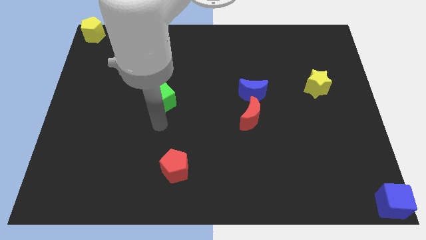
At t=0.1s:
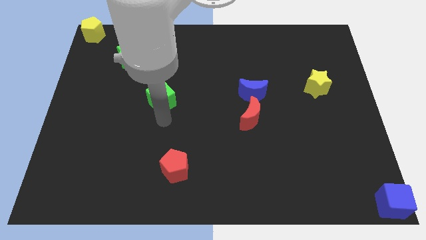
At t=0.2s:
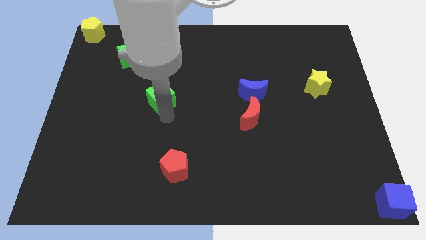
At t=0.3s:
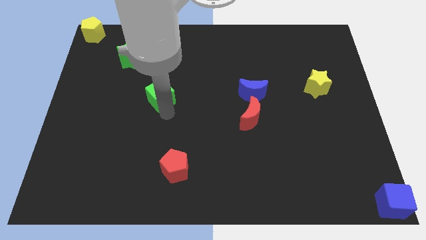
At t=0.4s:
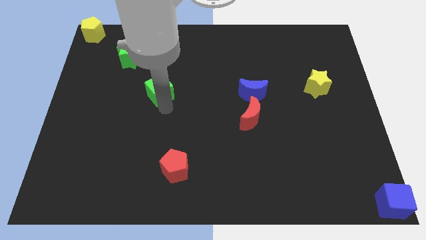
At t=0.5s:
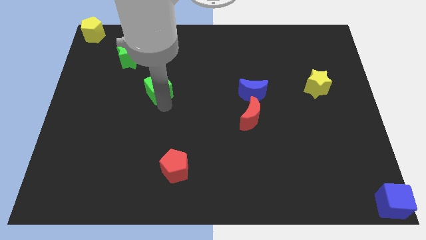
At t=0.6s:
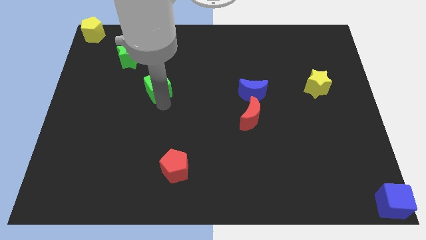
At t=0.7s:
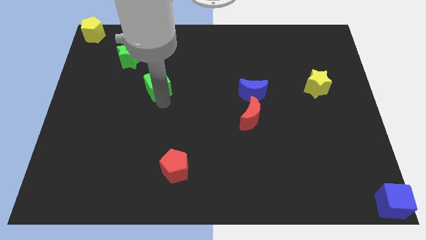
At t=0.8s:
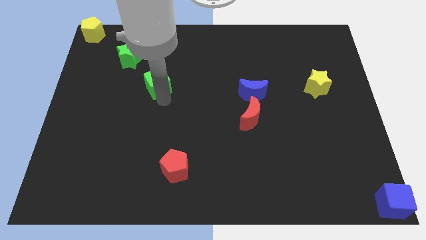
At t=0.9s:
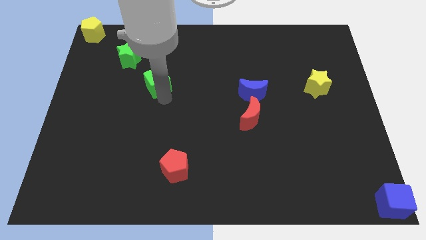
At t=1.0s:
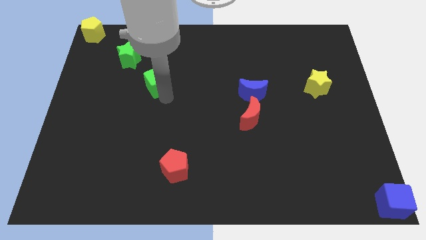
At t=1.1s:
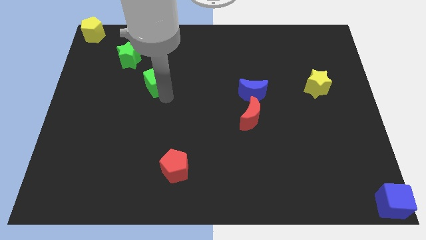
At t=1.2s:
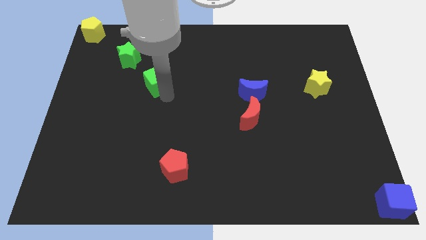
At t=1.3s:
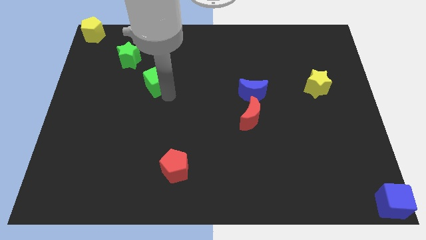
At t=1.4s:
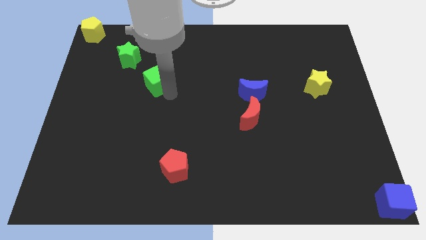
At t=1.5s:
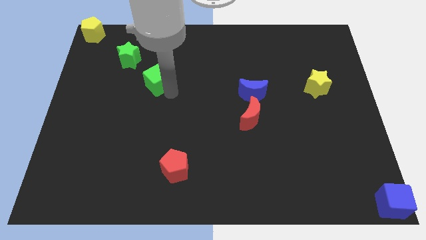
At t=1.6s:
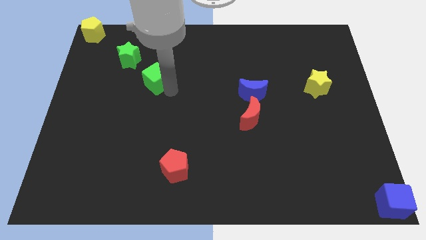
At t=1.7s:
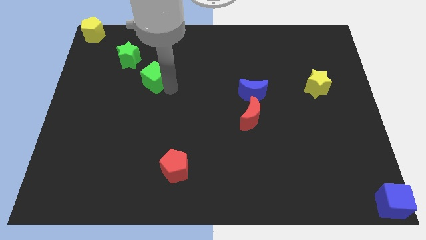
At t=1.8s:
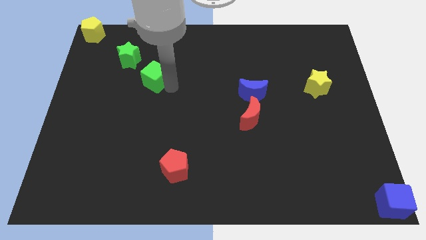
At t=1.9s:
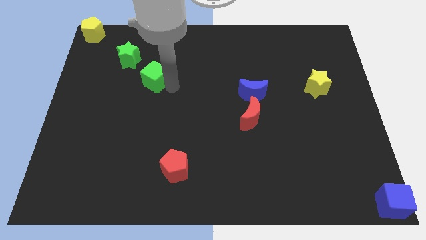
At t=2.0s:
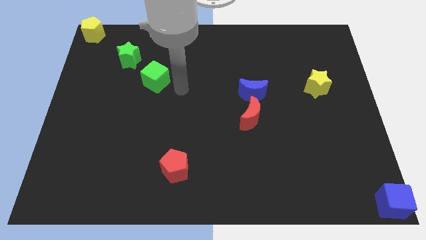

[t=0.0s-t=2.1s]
move the green cube slightly towards the bottom right side of the green star

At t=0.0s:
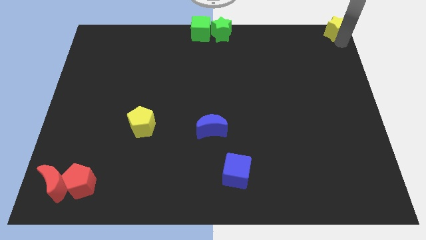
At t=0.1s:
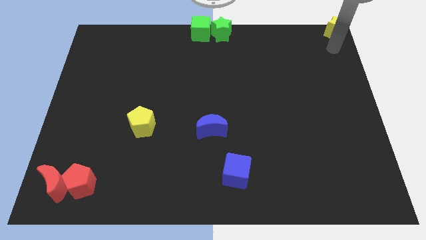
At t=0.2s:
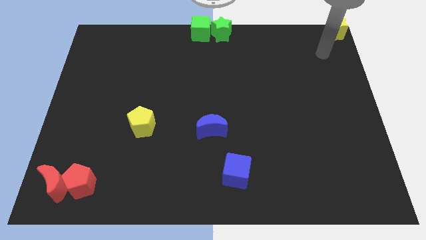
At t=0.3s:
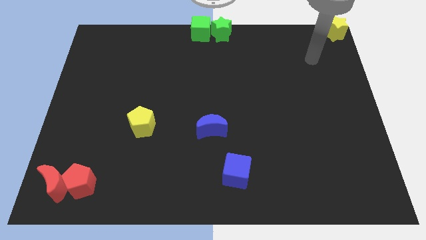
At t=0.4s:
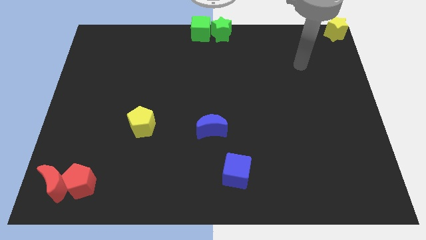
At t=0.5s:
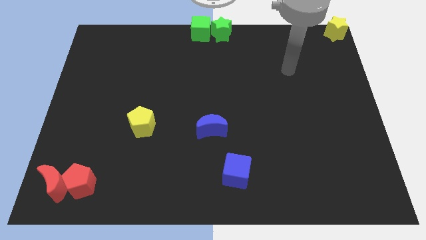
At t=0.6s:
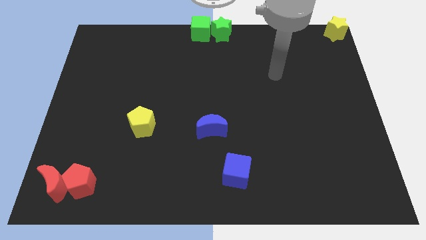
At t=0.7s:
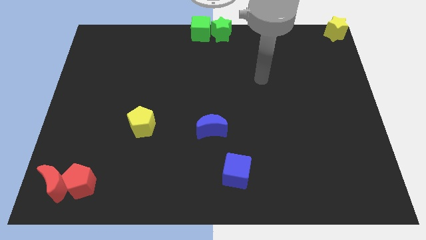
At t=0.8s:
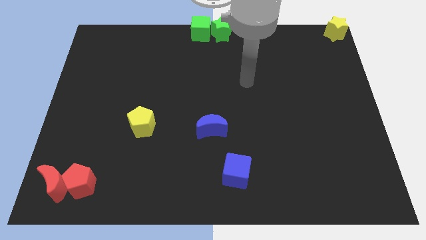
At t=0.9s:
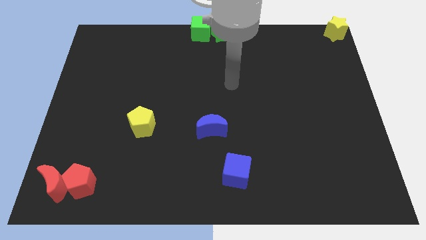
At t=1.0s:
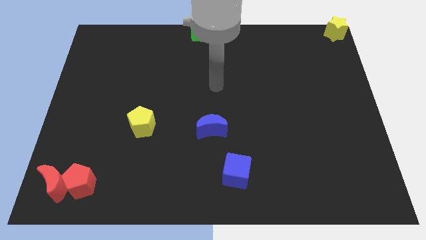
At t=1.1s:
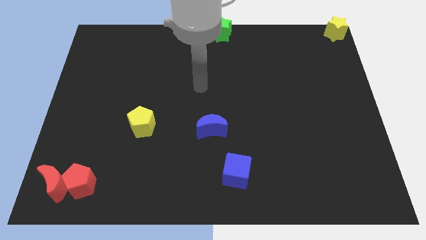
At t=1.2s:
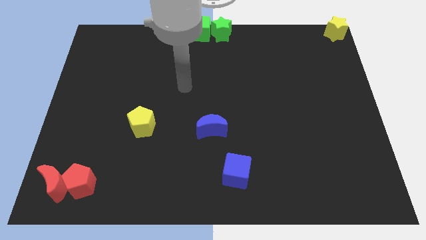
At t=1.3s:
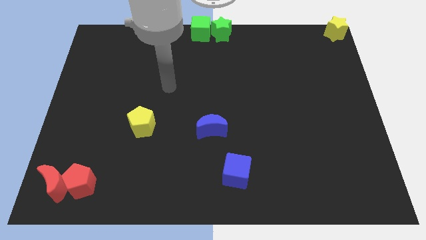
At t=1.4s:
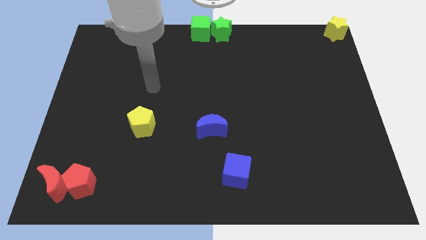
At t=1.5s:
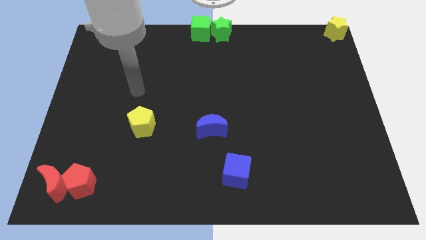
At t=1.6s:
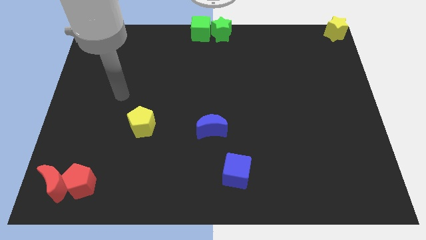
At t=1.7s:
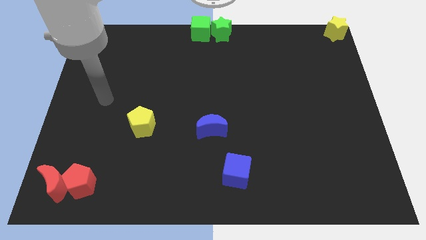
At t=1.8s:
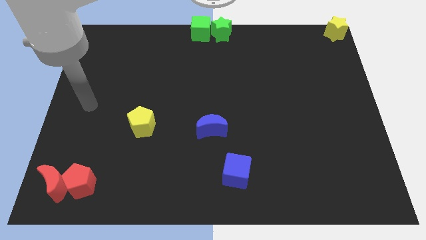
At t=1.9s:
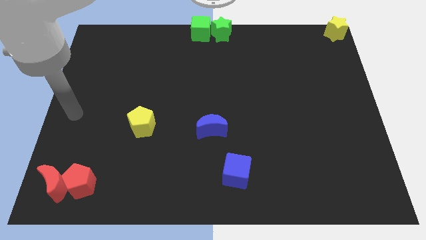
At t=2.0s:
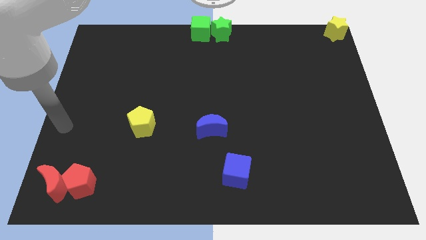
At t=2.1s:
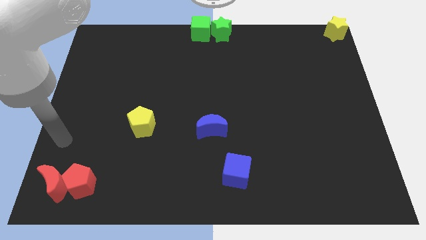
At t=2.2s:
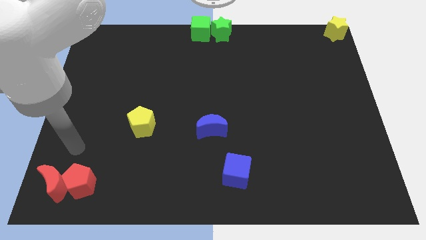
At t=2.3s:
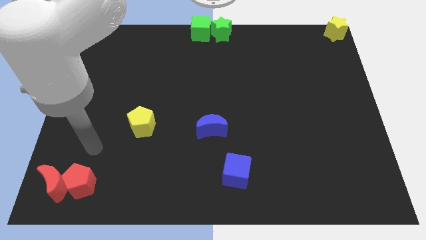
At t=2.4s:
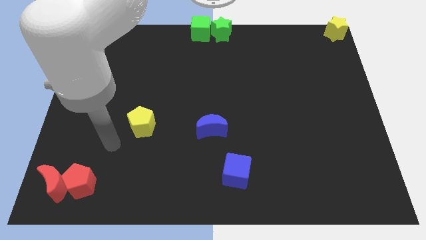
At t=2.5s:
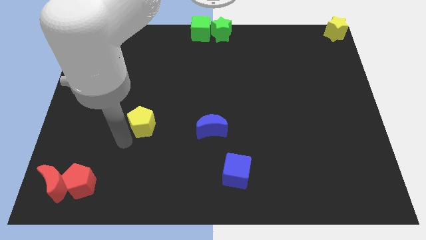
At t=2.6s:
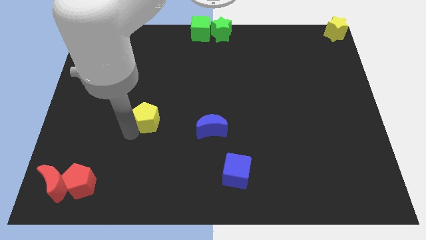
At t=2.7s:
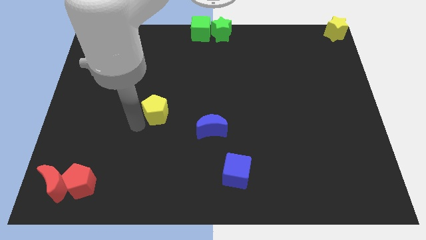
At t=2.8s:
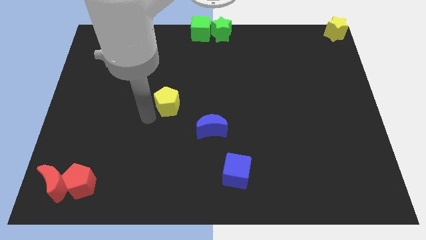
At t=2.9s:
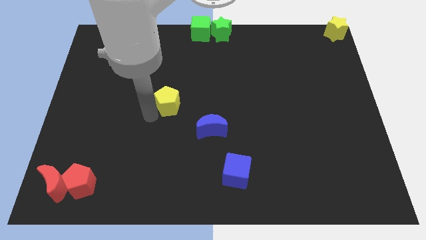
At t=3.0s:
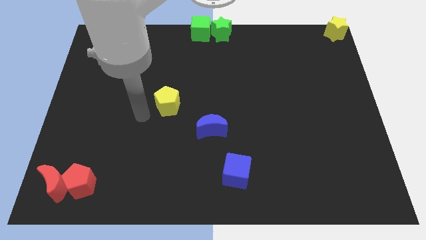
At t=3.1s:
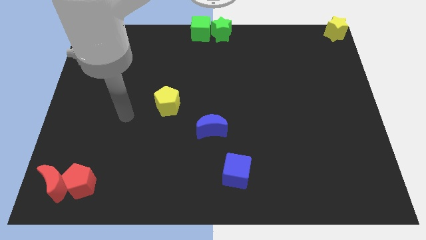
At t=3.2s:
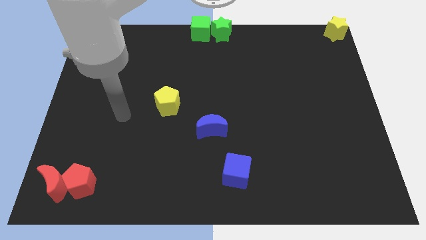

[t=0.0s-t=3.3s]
move the yellow pentagon diagonally above the top side of the blue moon

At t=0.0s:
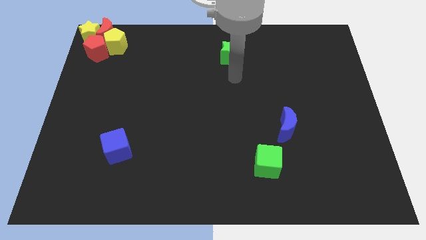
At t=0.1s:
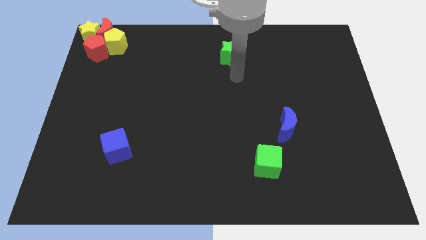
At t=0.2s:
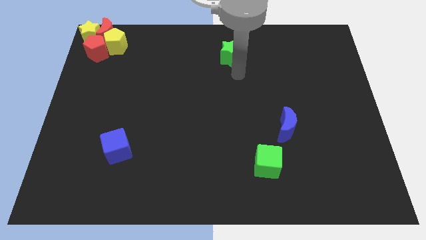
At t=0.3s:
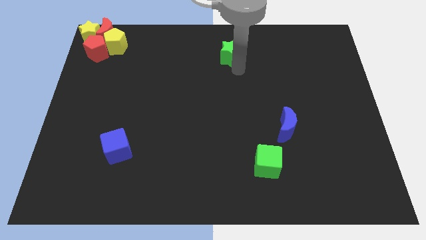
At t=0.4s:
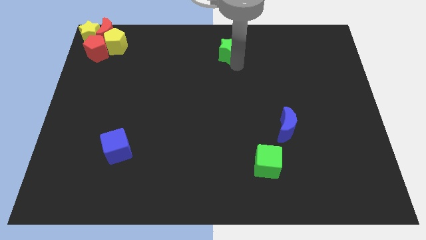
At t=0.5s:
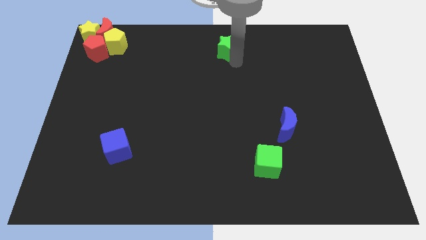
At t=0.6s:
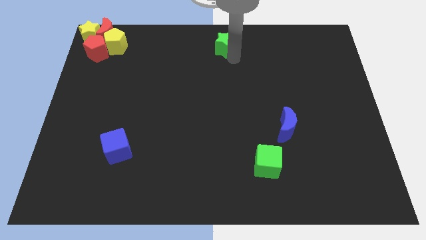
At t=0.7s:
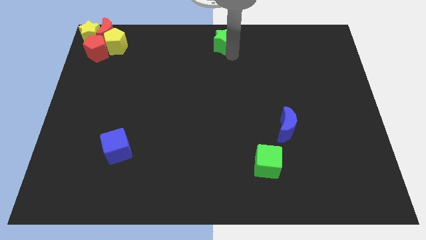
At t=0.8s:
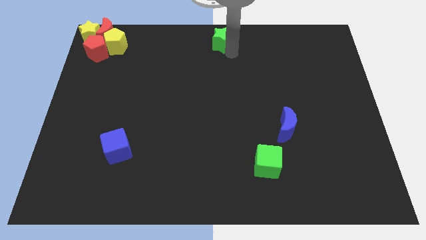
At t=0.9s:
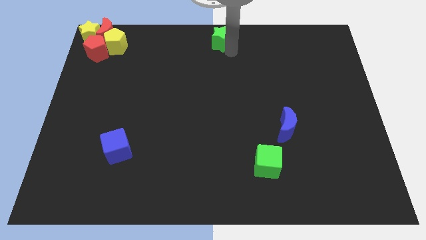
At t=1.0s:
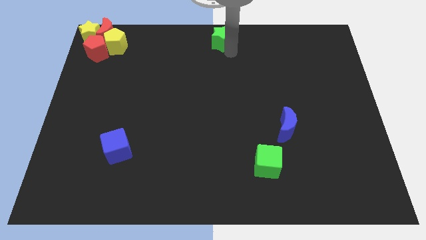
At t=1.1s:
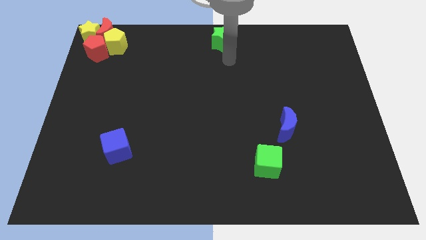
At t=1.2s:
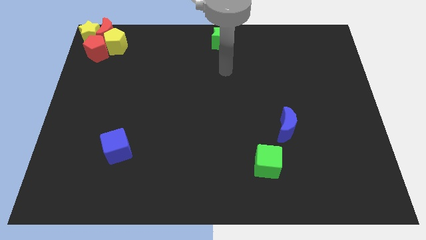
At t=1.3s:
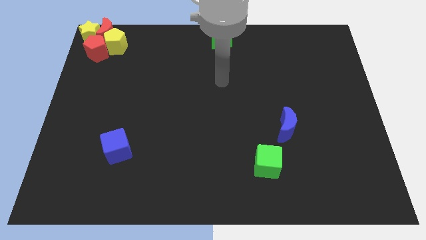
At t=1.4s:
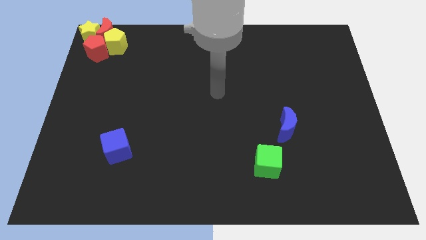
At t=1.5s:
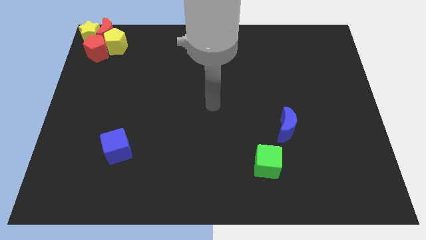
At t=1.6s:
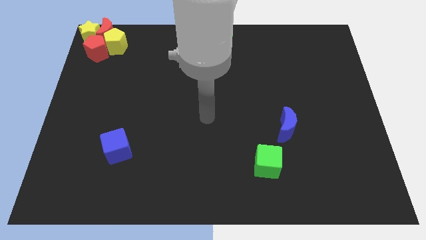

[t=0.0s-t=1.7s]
move green star to top center of the board

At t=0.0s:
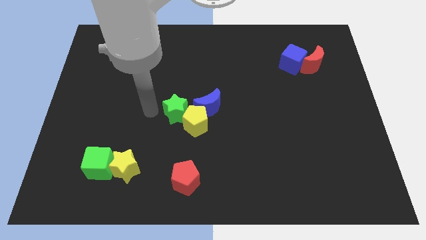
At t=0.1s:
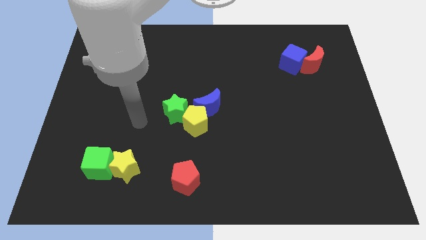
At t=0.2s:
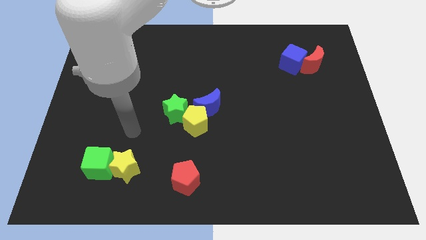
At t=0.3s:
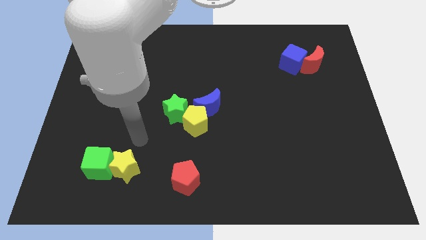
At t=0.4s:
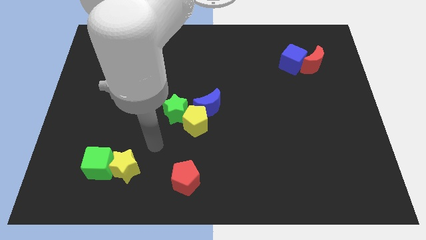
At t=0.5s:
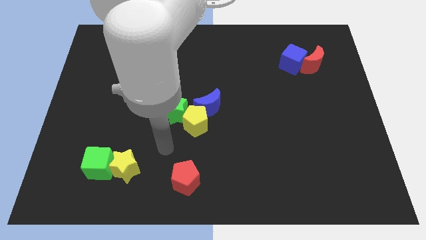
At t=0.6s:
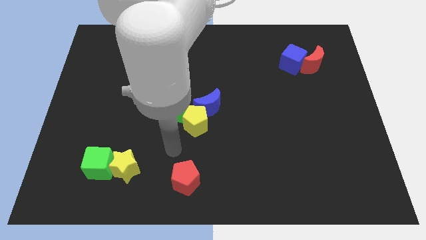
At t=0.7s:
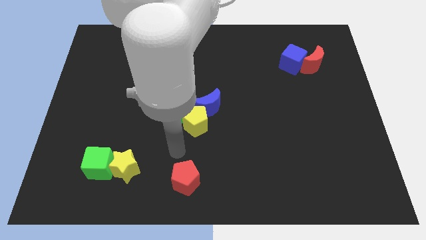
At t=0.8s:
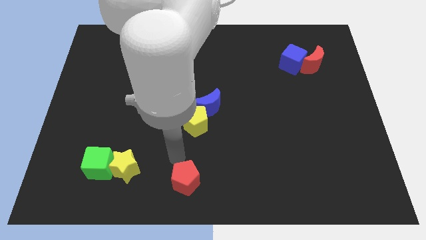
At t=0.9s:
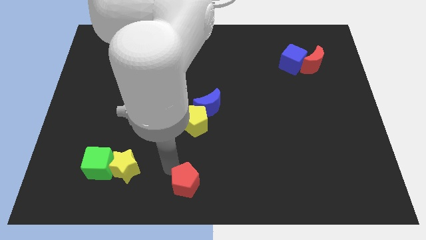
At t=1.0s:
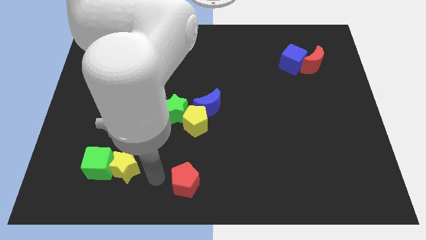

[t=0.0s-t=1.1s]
slide your arm in between yellow star and red pentagon

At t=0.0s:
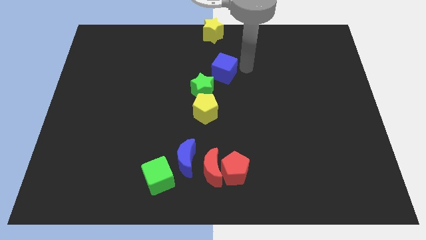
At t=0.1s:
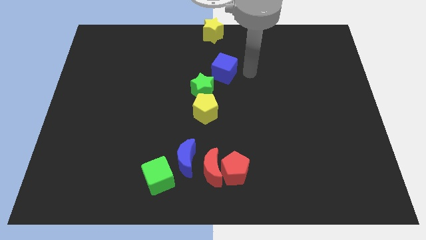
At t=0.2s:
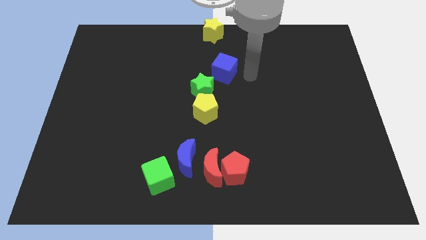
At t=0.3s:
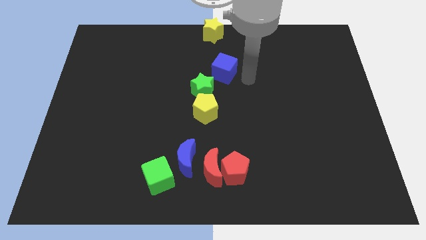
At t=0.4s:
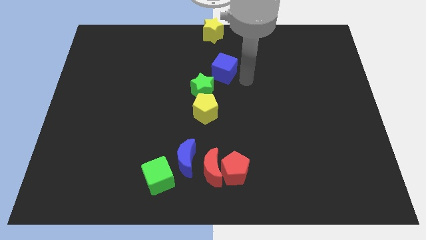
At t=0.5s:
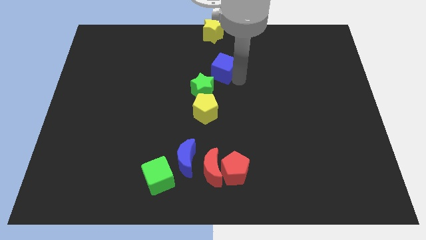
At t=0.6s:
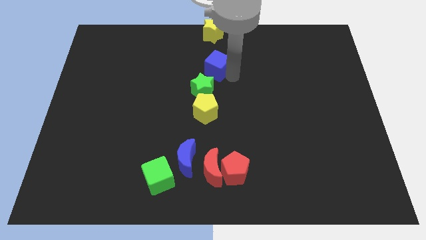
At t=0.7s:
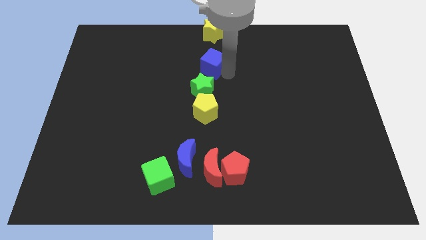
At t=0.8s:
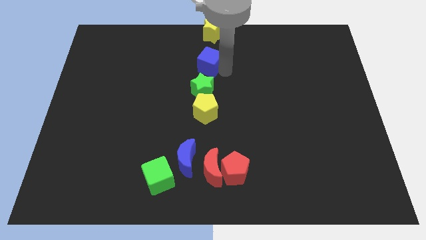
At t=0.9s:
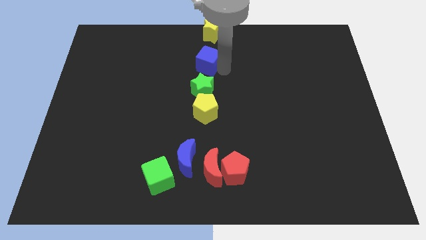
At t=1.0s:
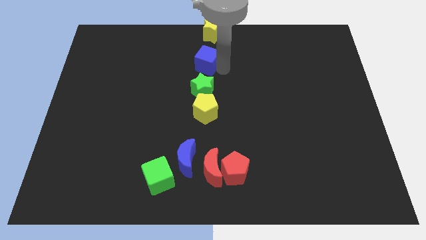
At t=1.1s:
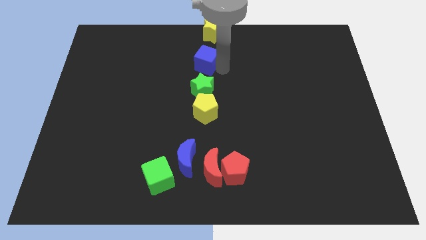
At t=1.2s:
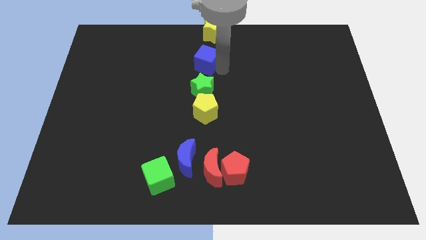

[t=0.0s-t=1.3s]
place the blue cube above the green star
